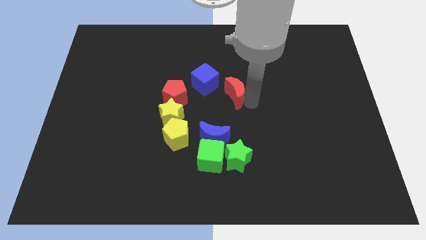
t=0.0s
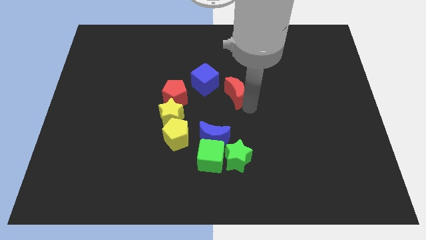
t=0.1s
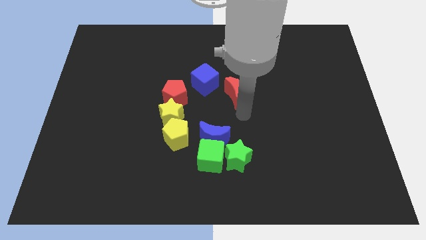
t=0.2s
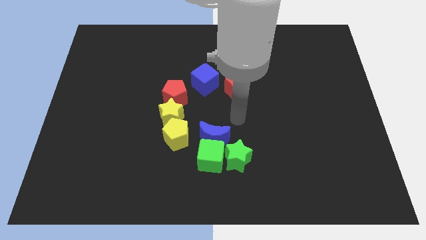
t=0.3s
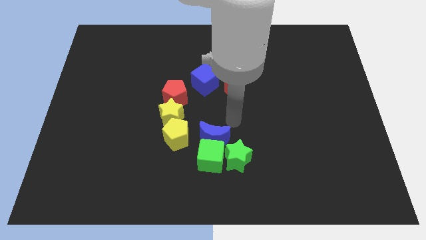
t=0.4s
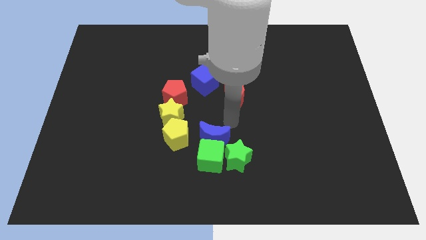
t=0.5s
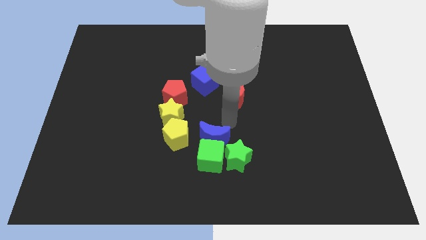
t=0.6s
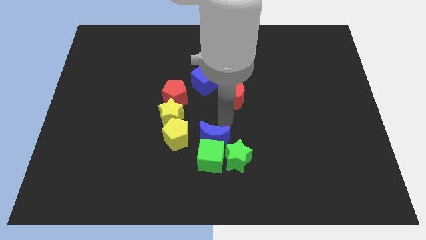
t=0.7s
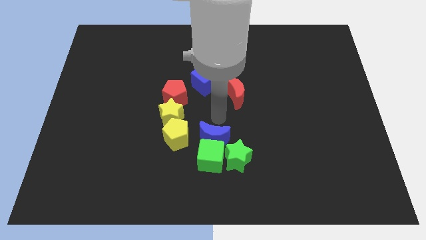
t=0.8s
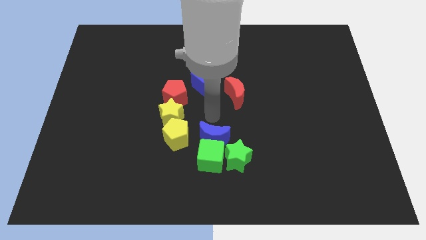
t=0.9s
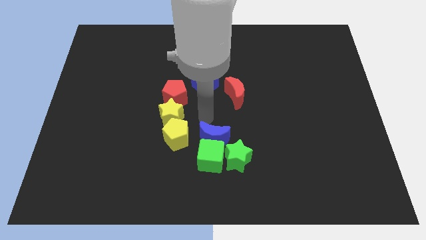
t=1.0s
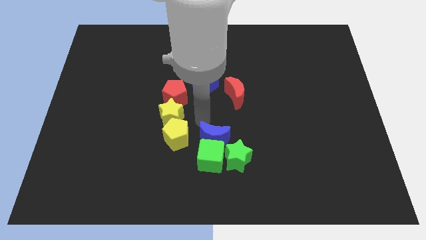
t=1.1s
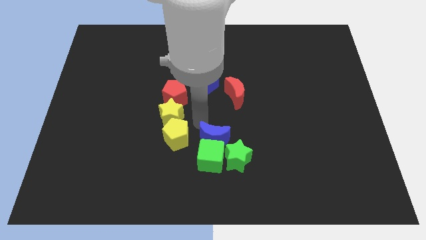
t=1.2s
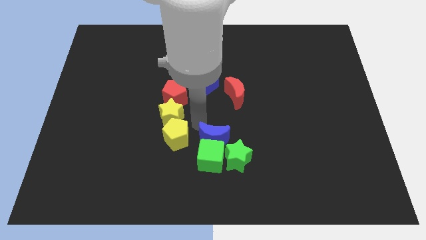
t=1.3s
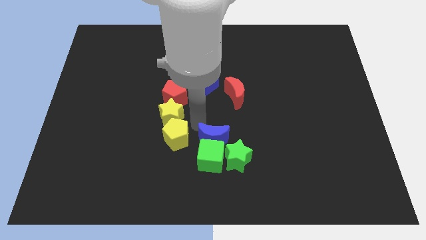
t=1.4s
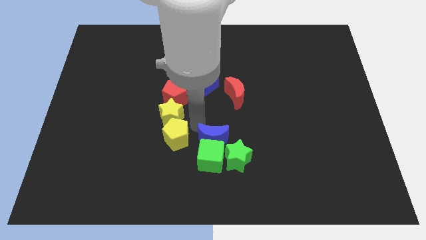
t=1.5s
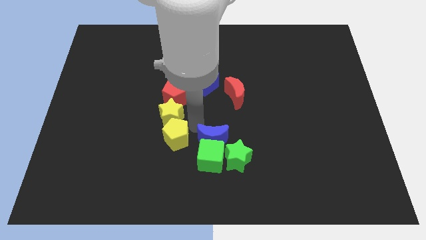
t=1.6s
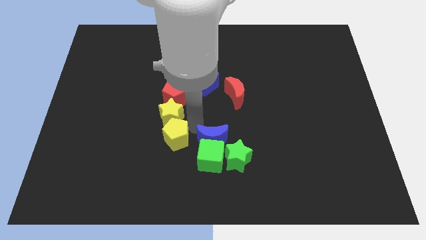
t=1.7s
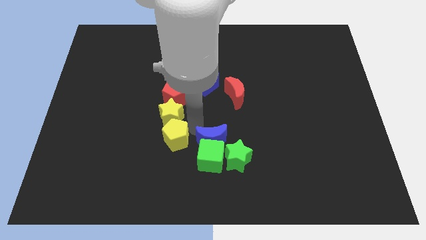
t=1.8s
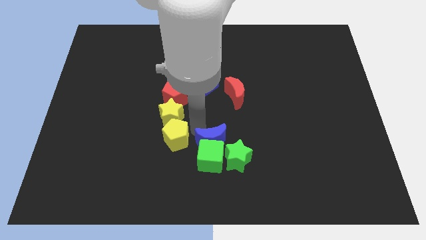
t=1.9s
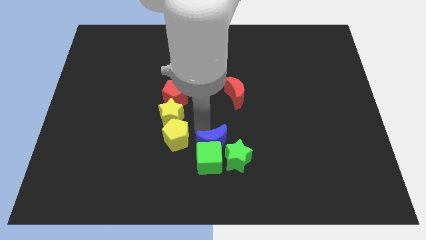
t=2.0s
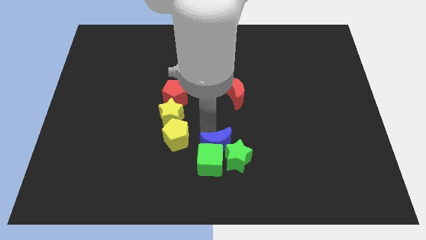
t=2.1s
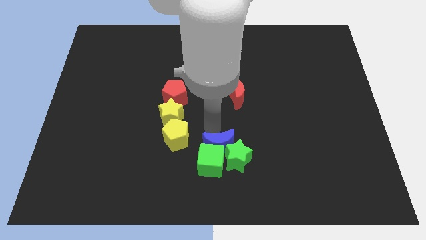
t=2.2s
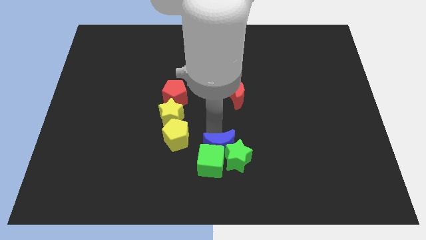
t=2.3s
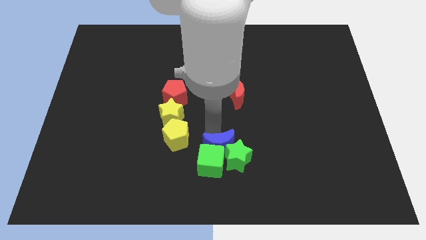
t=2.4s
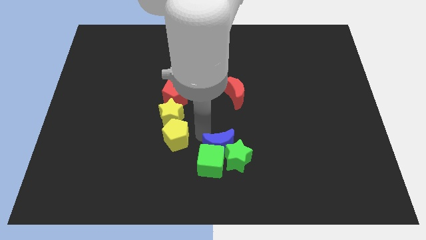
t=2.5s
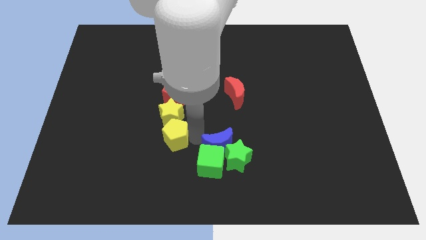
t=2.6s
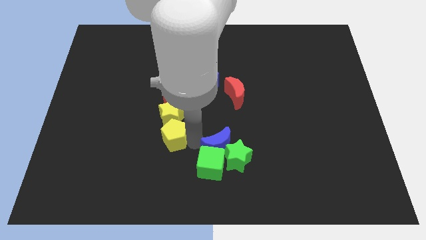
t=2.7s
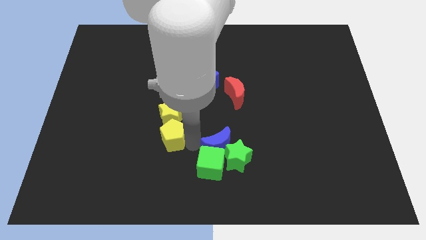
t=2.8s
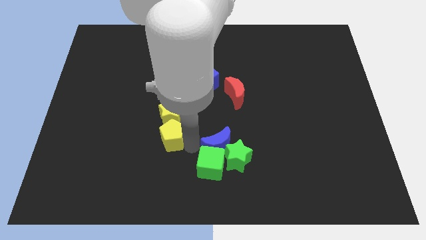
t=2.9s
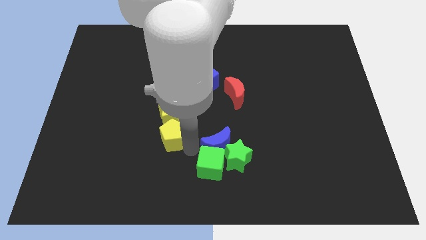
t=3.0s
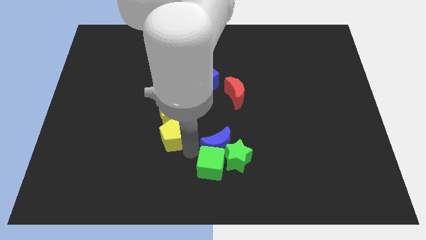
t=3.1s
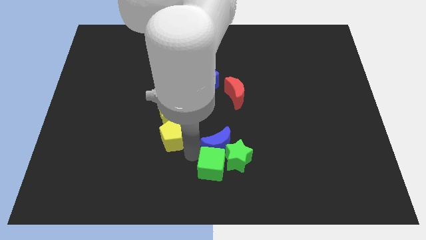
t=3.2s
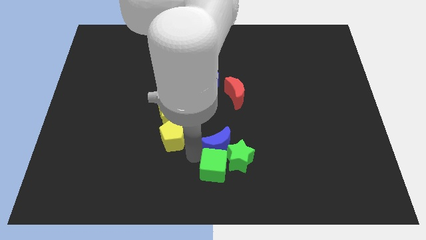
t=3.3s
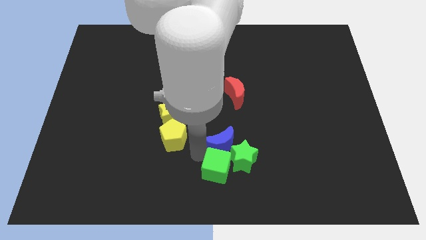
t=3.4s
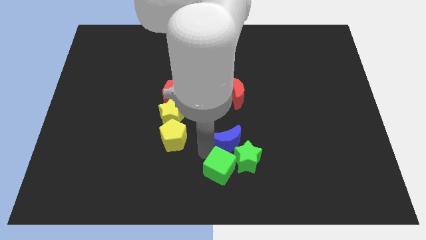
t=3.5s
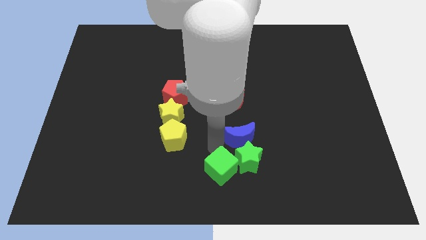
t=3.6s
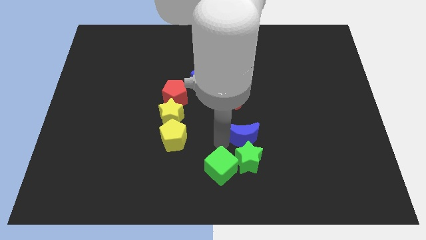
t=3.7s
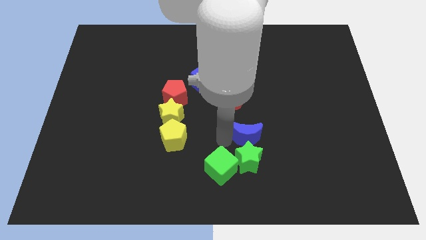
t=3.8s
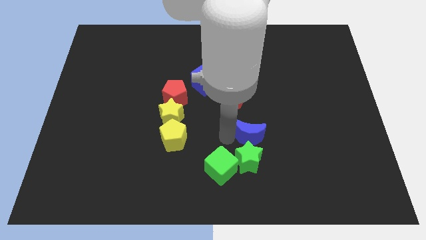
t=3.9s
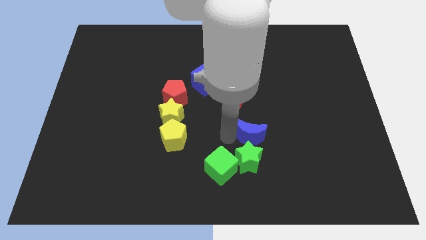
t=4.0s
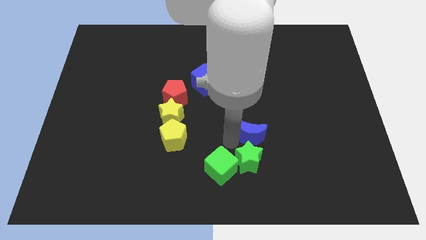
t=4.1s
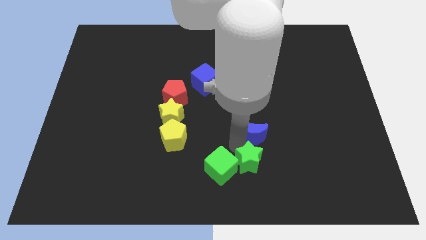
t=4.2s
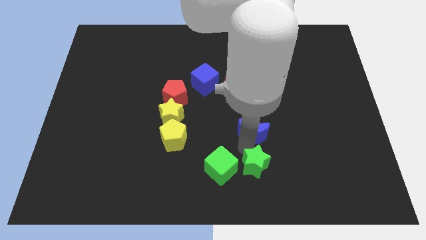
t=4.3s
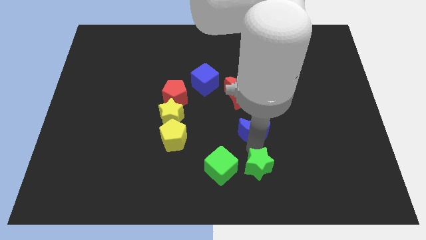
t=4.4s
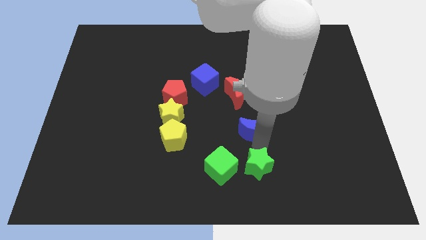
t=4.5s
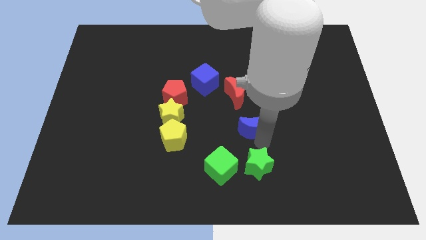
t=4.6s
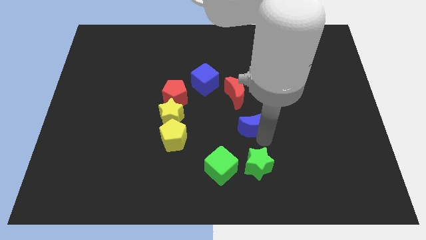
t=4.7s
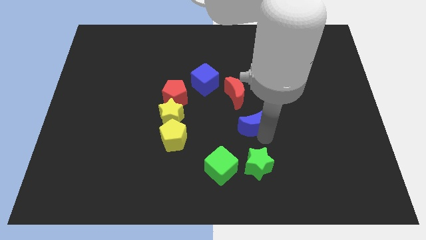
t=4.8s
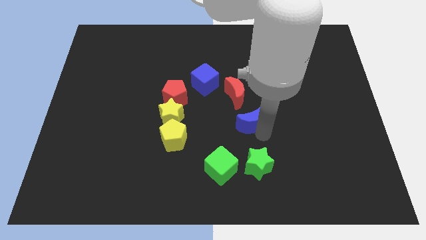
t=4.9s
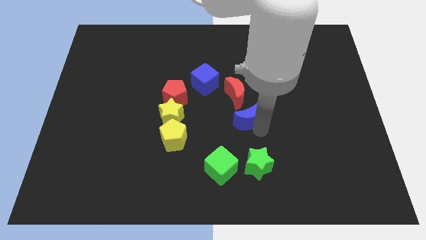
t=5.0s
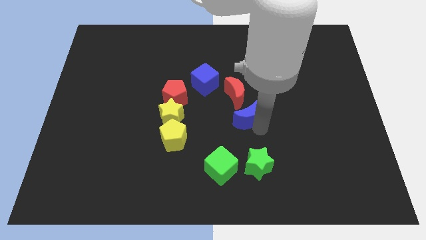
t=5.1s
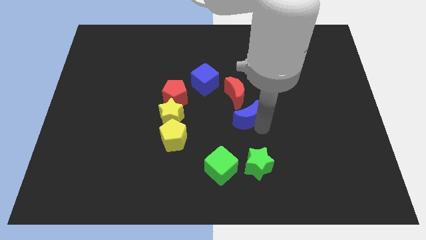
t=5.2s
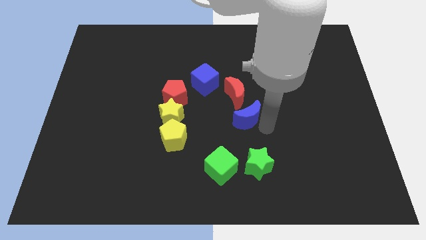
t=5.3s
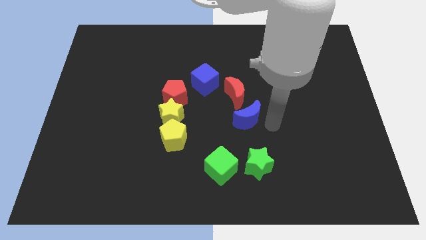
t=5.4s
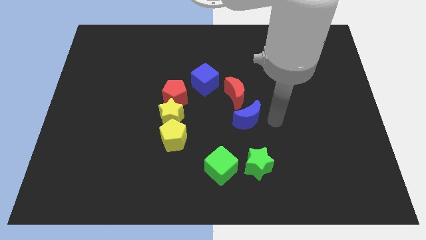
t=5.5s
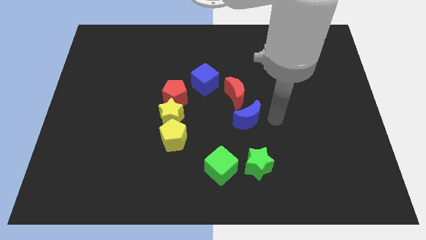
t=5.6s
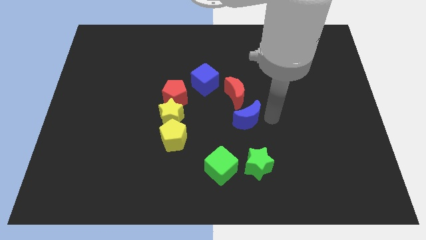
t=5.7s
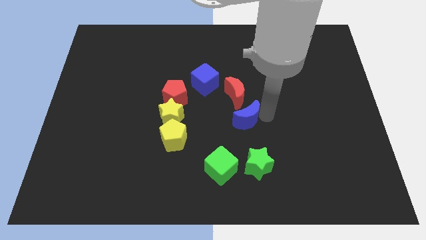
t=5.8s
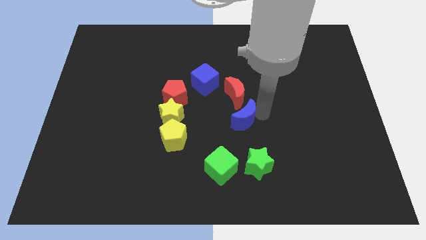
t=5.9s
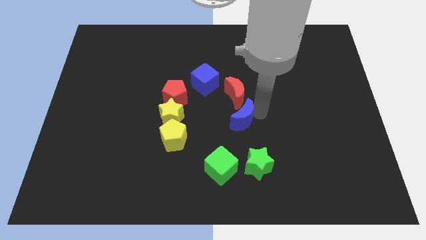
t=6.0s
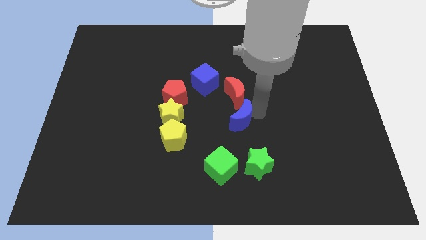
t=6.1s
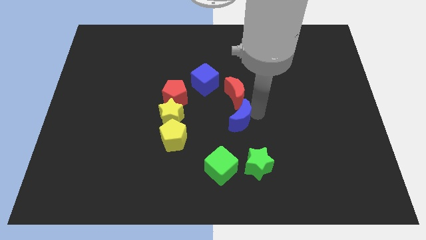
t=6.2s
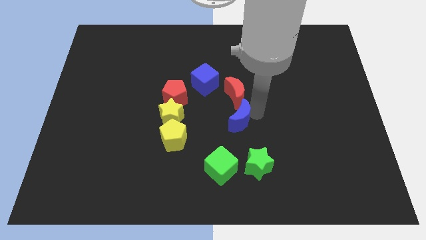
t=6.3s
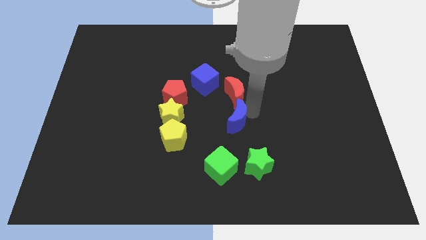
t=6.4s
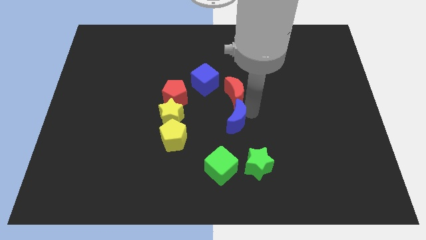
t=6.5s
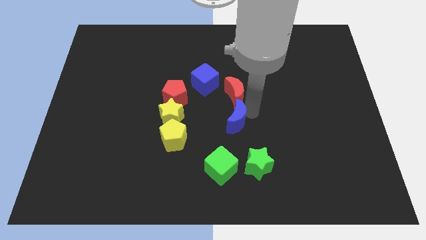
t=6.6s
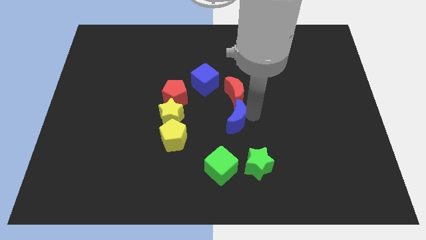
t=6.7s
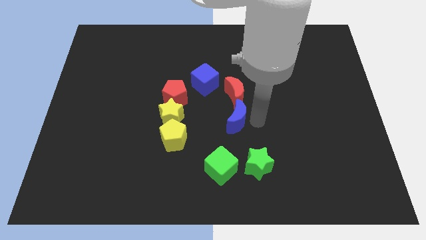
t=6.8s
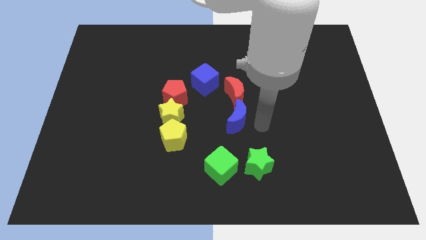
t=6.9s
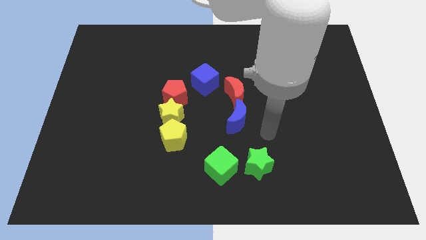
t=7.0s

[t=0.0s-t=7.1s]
place the blue crescent to the right of the yellow star

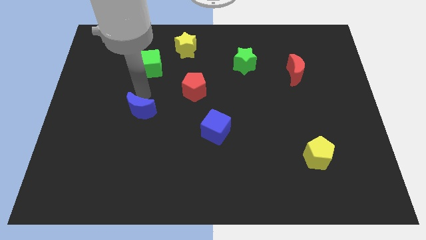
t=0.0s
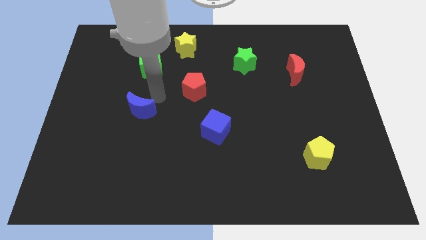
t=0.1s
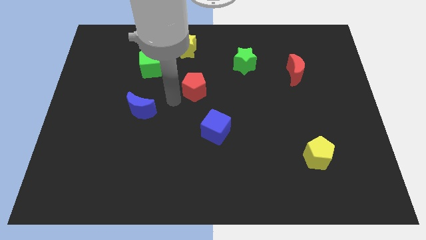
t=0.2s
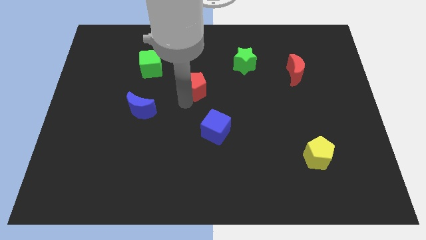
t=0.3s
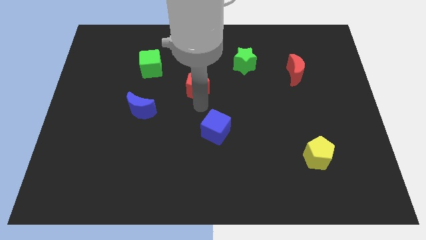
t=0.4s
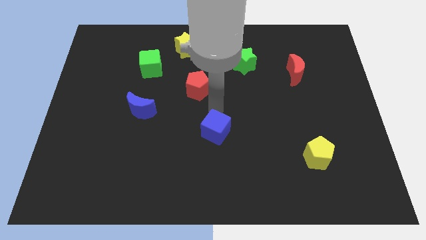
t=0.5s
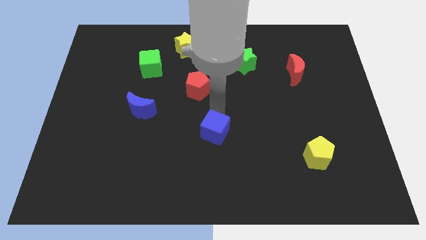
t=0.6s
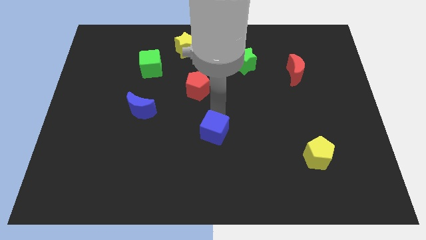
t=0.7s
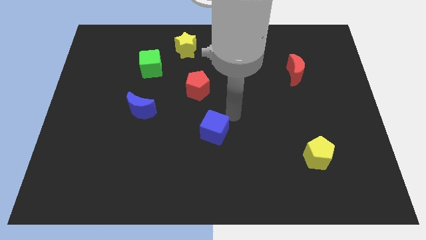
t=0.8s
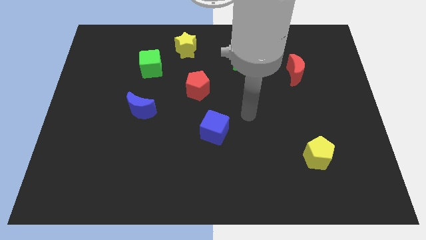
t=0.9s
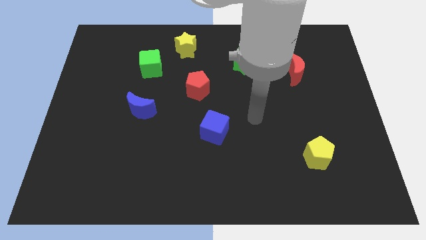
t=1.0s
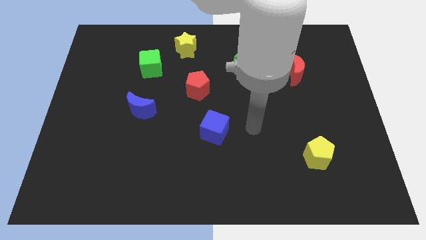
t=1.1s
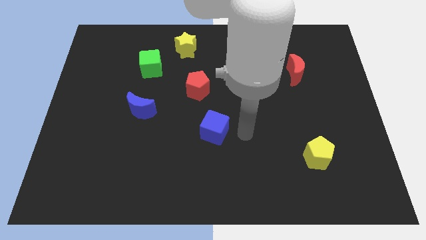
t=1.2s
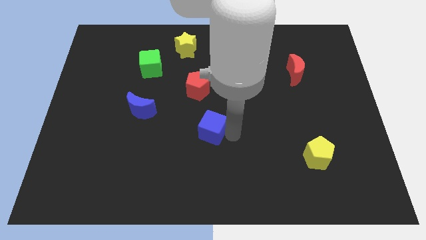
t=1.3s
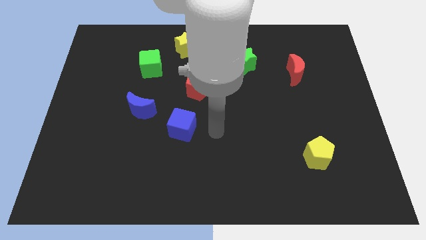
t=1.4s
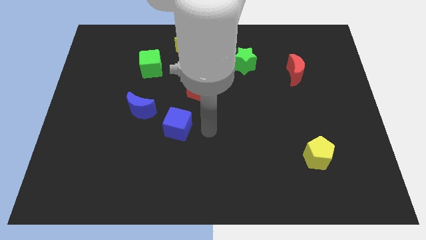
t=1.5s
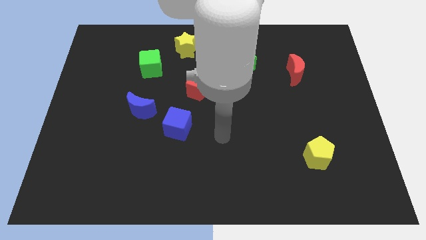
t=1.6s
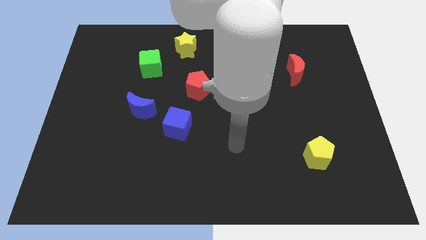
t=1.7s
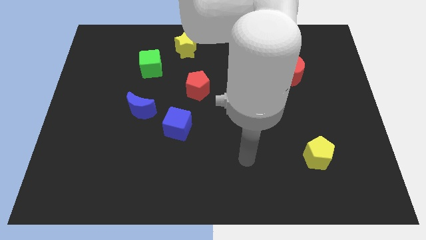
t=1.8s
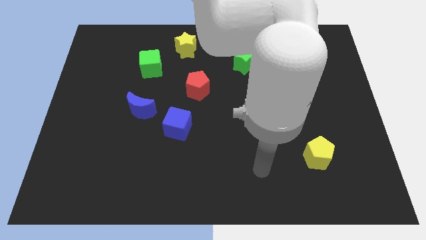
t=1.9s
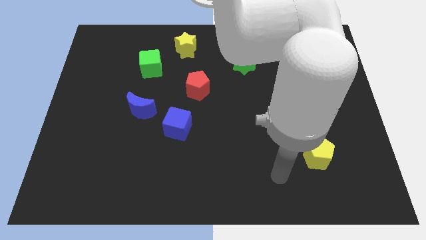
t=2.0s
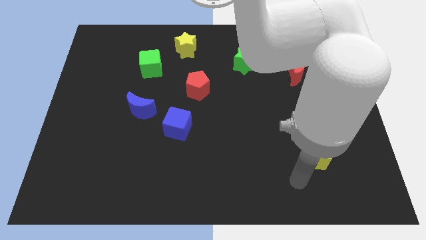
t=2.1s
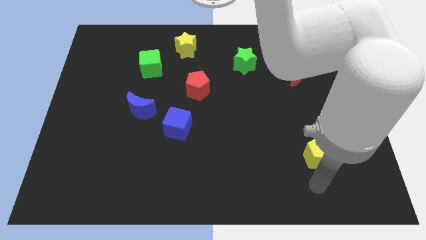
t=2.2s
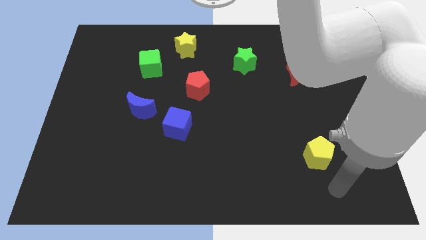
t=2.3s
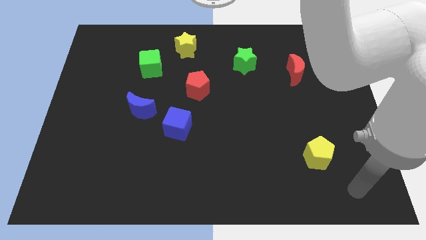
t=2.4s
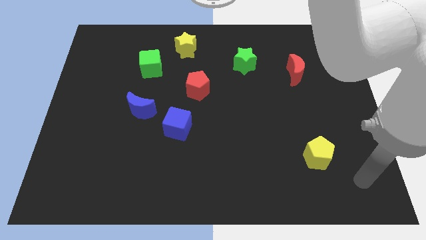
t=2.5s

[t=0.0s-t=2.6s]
push the blue cube to the right side of the blue moon
